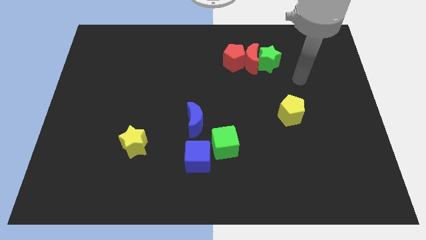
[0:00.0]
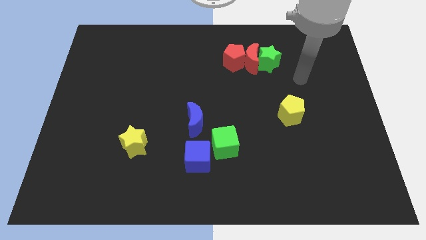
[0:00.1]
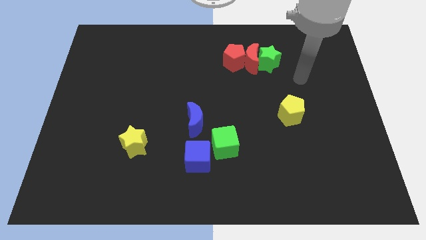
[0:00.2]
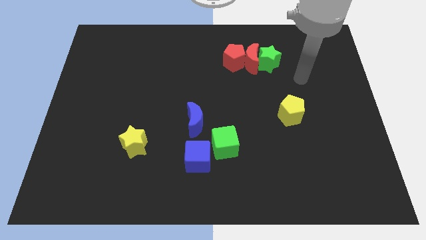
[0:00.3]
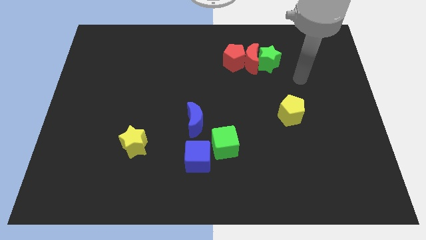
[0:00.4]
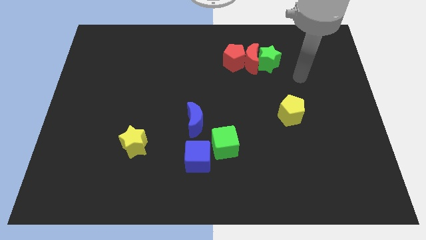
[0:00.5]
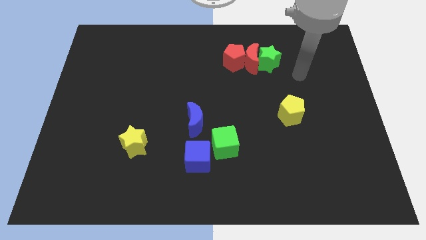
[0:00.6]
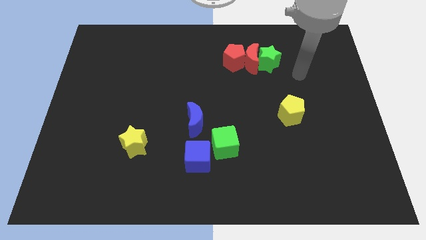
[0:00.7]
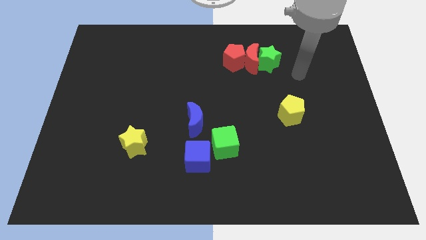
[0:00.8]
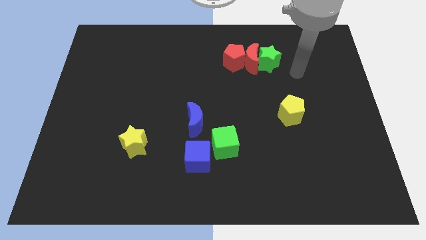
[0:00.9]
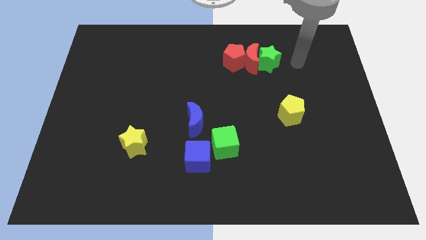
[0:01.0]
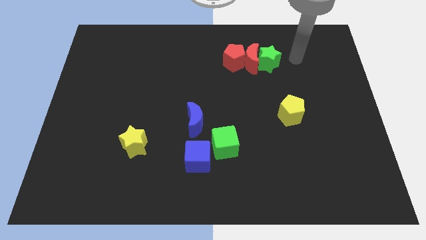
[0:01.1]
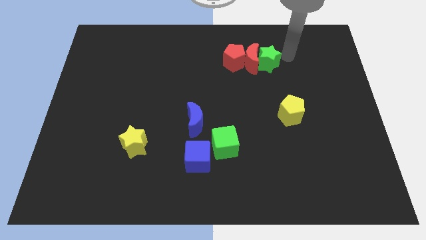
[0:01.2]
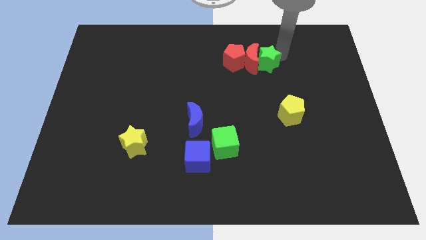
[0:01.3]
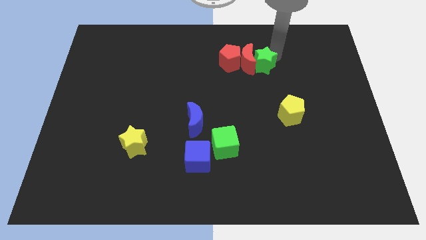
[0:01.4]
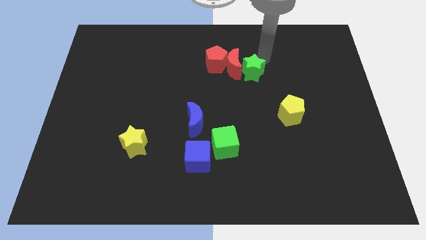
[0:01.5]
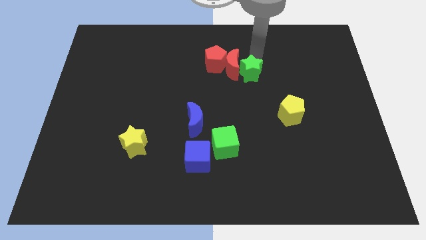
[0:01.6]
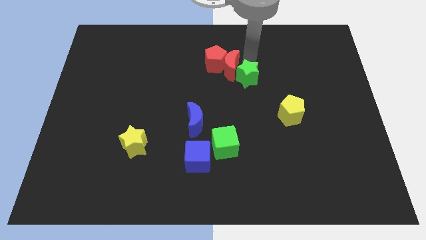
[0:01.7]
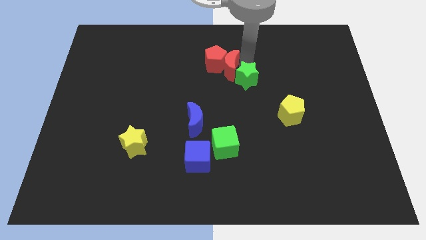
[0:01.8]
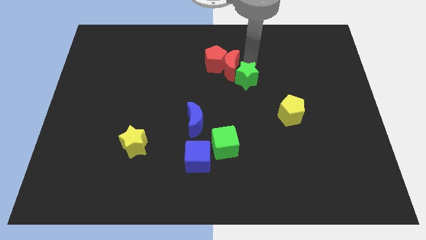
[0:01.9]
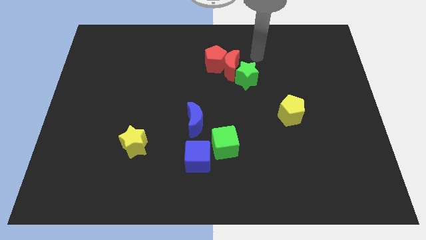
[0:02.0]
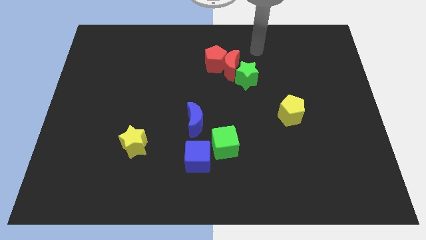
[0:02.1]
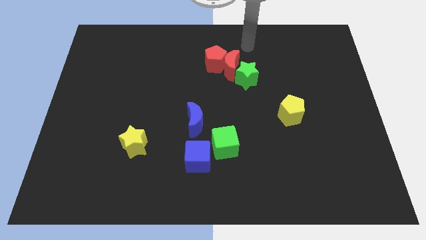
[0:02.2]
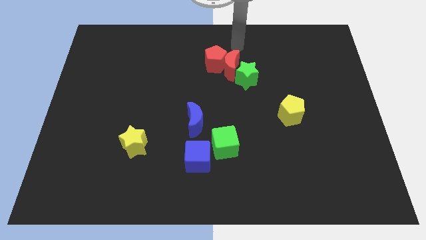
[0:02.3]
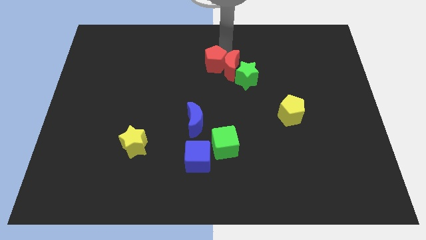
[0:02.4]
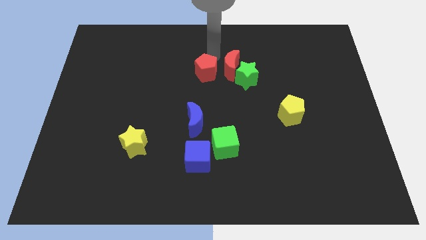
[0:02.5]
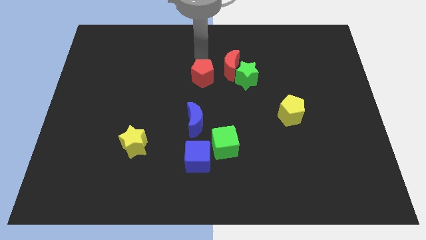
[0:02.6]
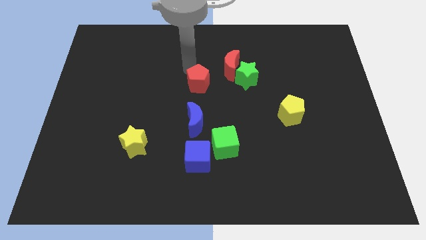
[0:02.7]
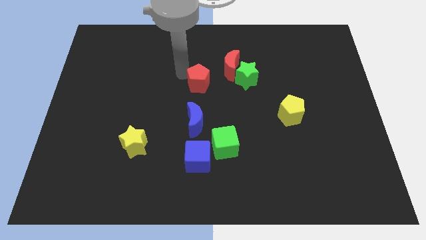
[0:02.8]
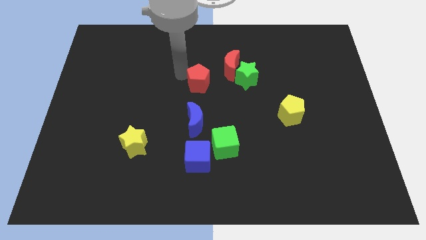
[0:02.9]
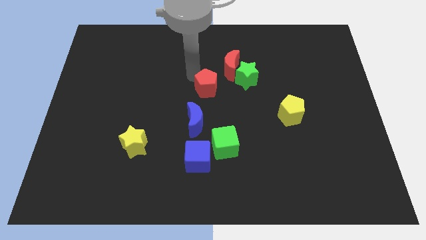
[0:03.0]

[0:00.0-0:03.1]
move the green star and red blocks to the left

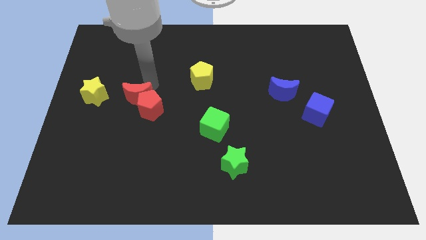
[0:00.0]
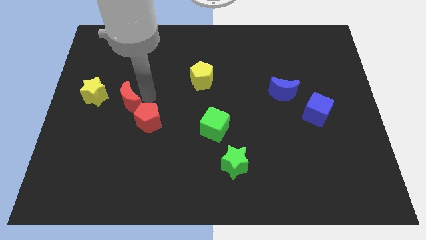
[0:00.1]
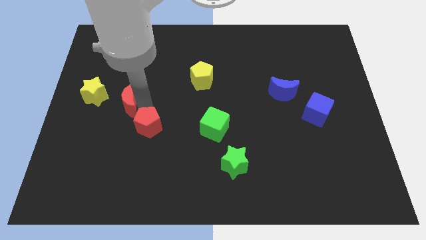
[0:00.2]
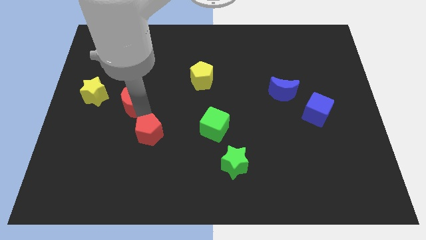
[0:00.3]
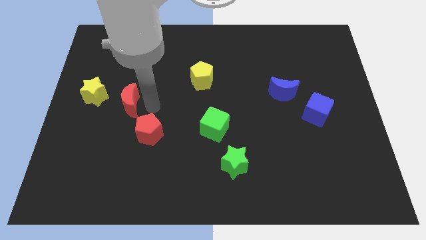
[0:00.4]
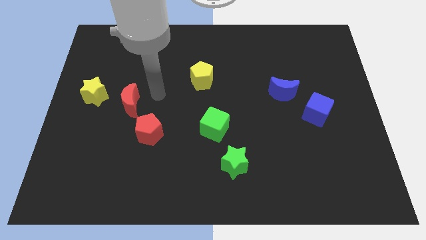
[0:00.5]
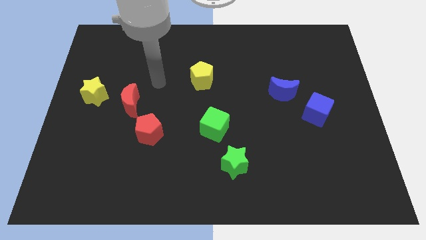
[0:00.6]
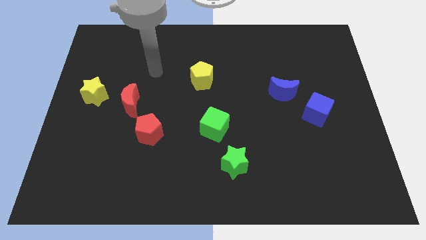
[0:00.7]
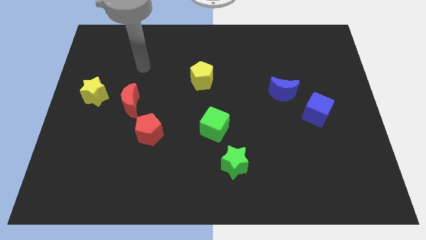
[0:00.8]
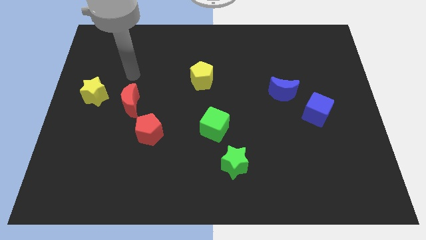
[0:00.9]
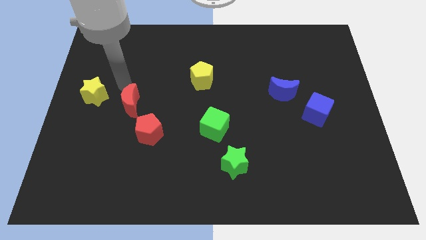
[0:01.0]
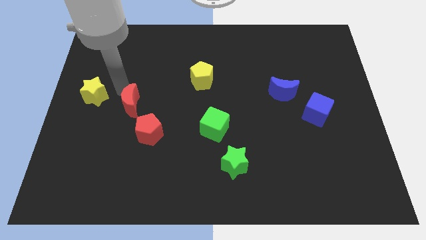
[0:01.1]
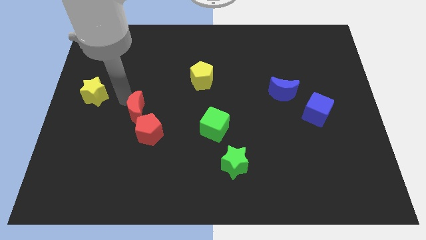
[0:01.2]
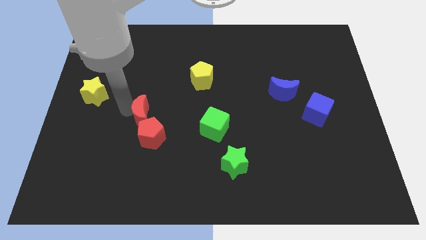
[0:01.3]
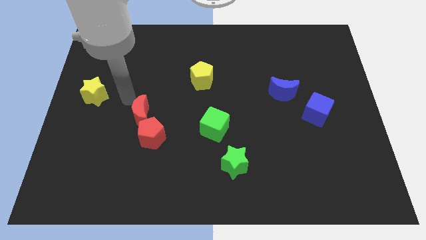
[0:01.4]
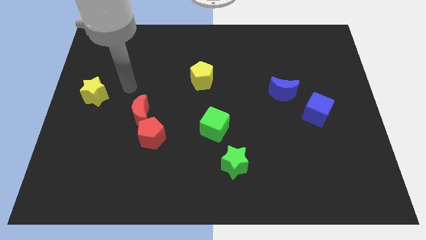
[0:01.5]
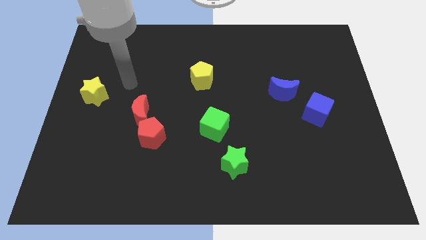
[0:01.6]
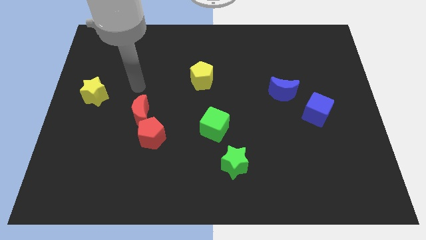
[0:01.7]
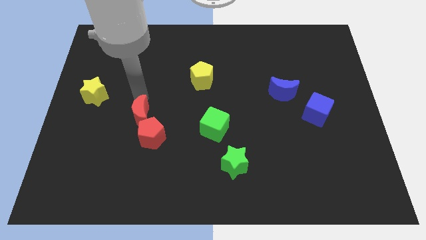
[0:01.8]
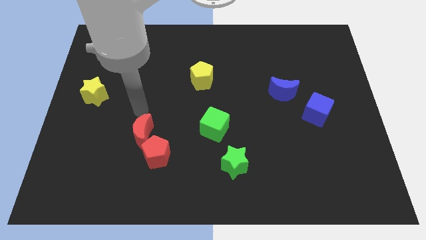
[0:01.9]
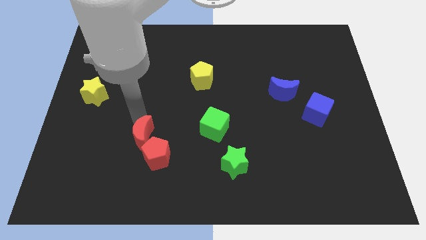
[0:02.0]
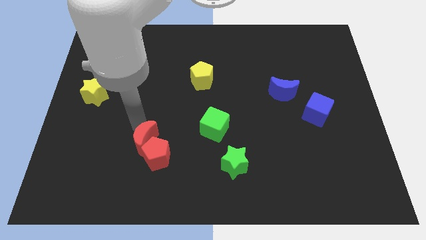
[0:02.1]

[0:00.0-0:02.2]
push the red blocks towards the bottom side of the board

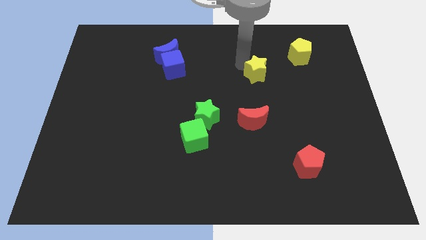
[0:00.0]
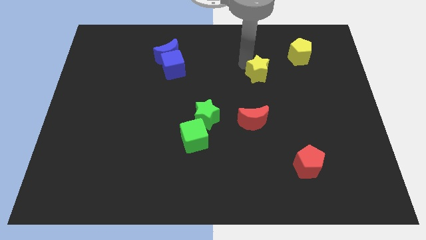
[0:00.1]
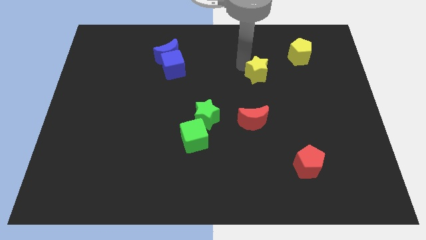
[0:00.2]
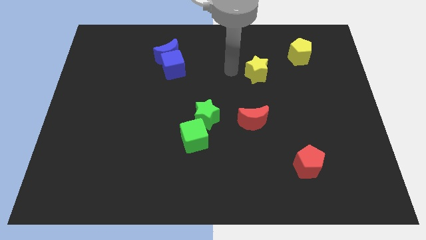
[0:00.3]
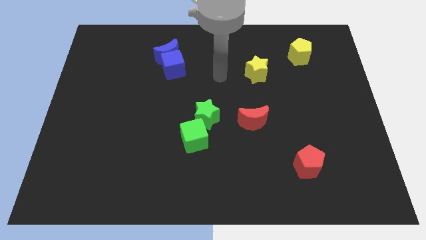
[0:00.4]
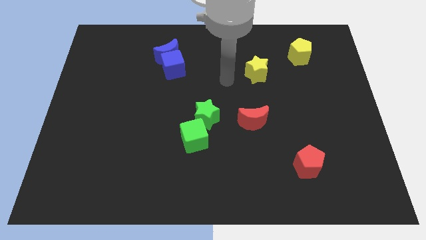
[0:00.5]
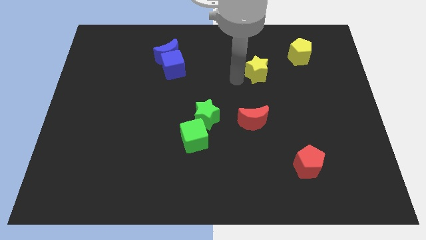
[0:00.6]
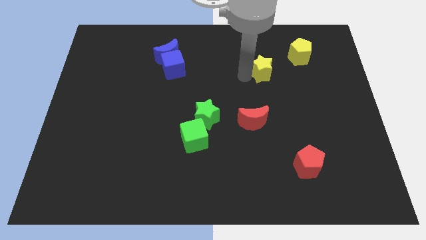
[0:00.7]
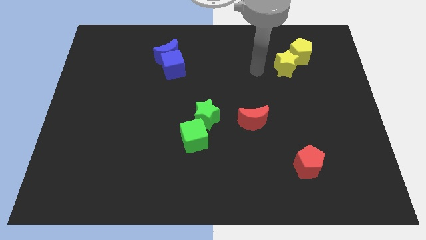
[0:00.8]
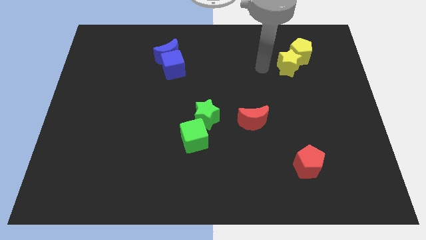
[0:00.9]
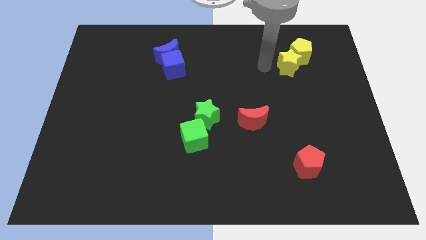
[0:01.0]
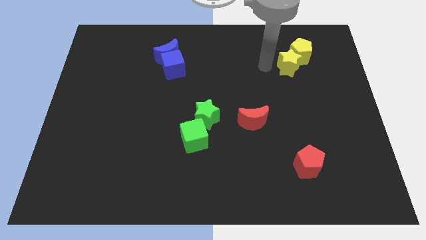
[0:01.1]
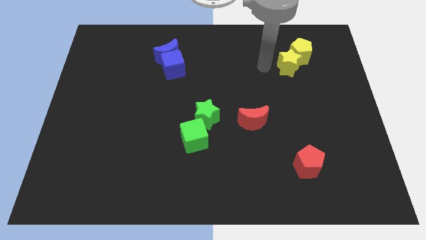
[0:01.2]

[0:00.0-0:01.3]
move the yellow star close to the yellow pentagon

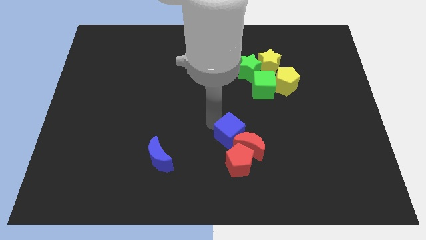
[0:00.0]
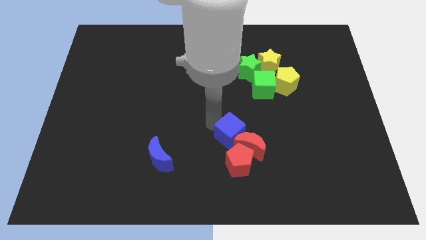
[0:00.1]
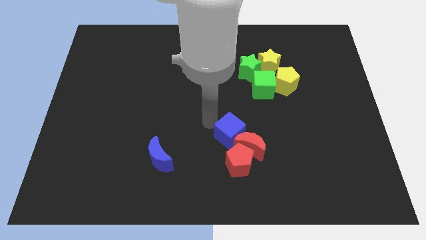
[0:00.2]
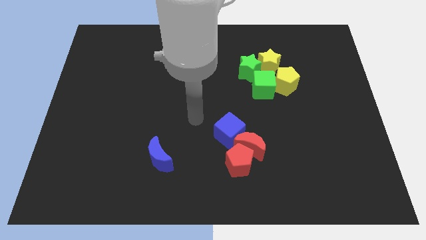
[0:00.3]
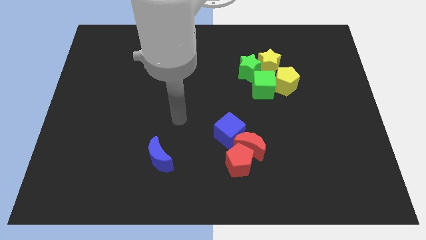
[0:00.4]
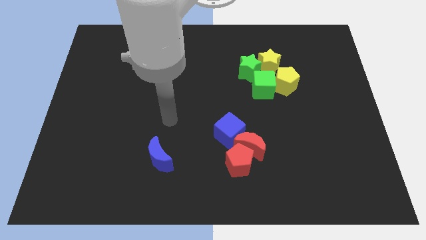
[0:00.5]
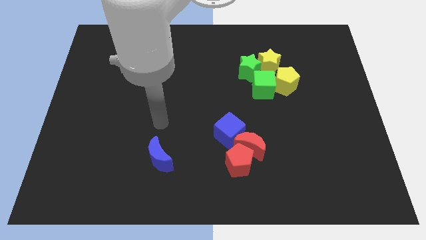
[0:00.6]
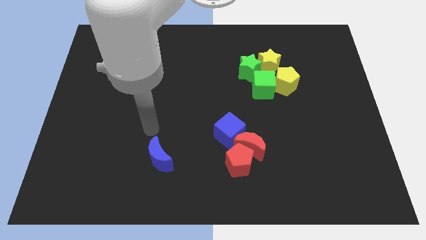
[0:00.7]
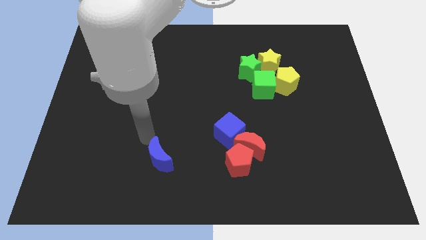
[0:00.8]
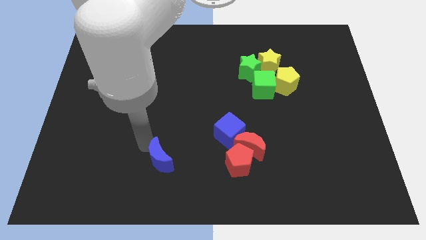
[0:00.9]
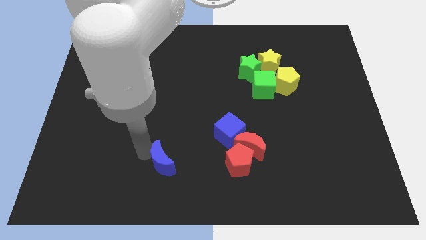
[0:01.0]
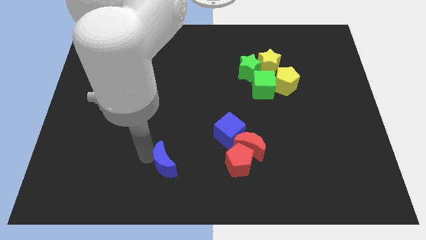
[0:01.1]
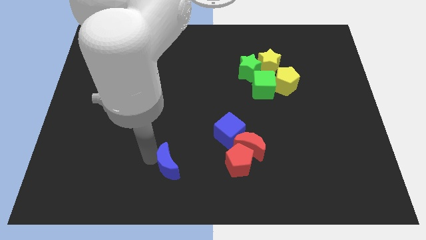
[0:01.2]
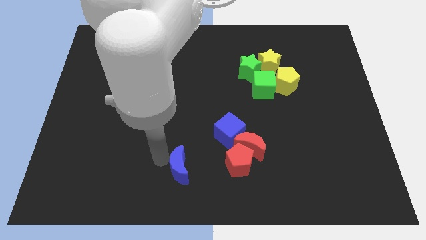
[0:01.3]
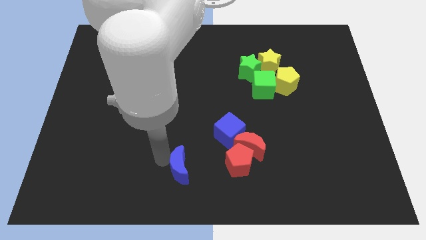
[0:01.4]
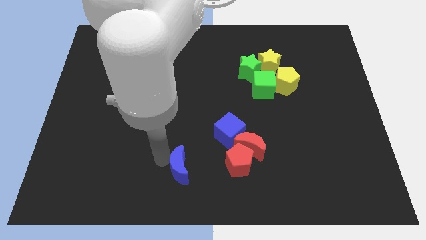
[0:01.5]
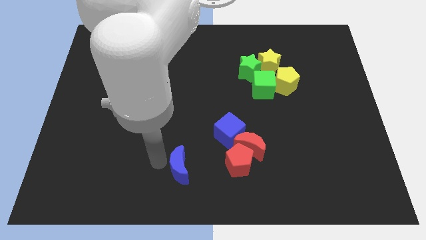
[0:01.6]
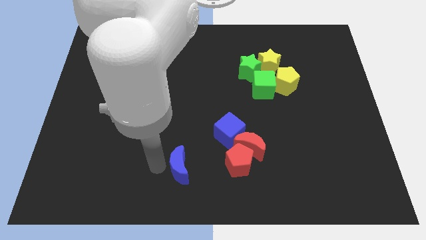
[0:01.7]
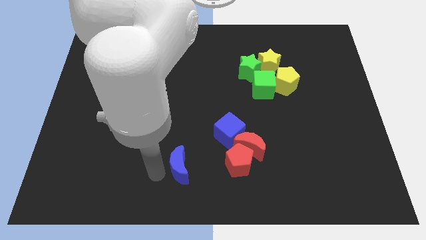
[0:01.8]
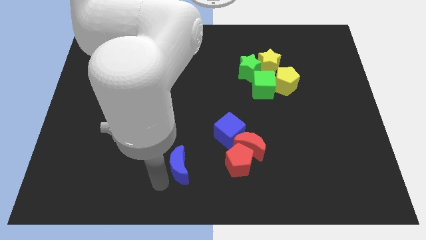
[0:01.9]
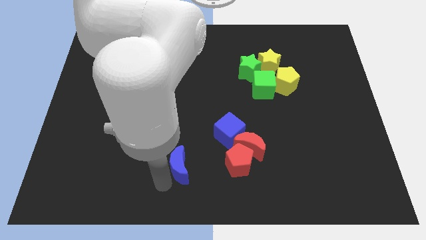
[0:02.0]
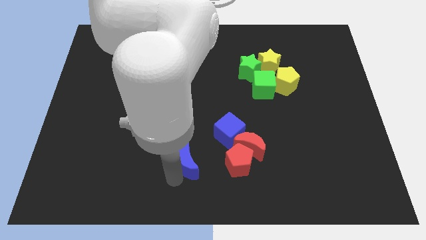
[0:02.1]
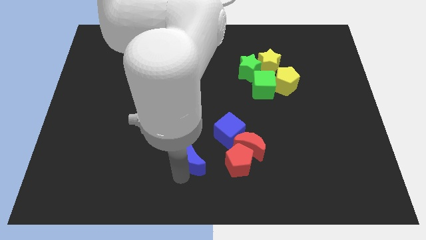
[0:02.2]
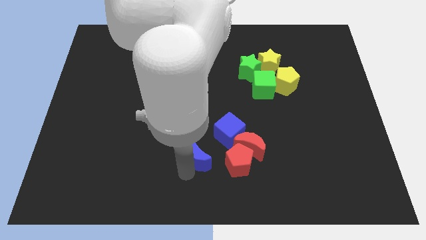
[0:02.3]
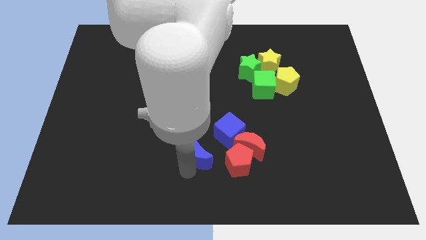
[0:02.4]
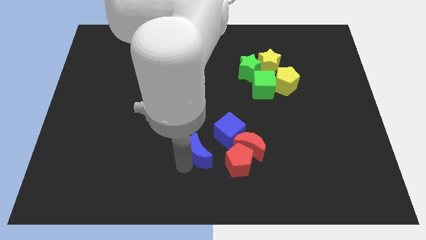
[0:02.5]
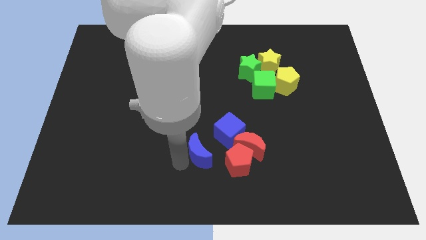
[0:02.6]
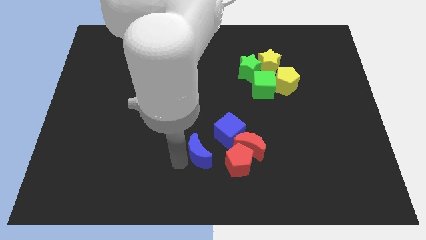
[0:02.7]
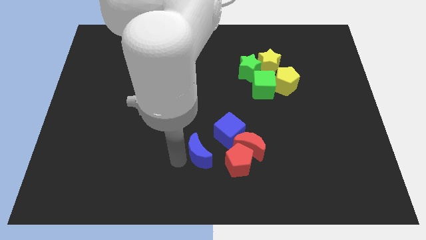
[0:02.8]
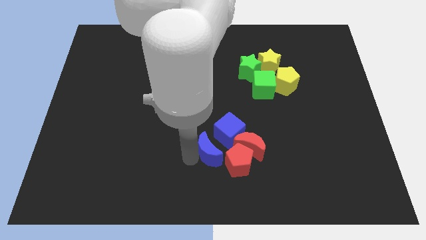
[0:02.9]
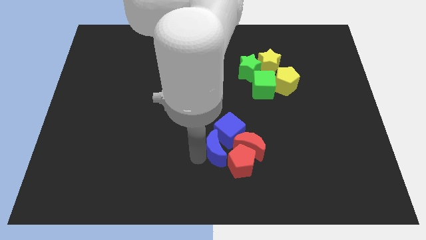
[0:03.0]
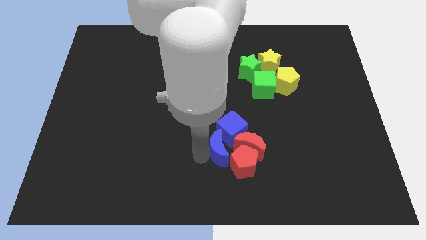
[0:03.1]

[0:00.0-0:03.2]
slide the blue moon into the group of red blocks and the blue cube
